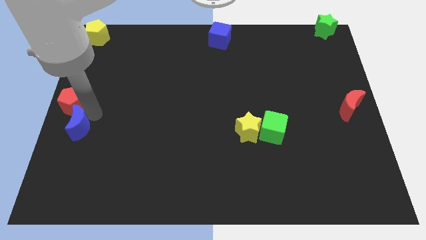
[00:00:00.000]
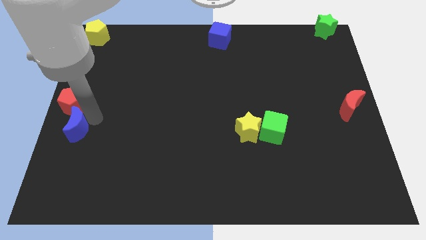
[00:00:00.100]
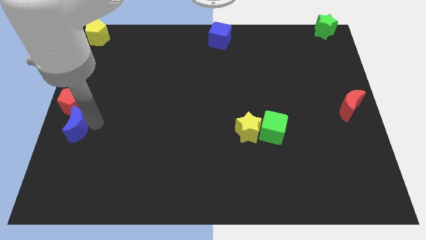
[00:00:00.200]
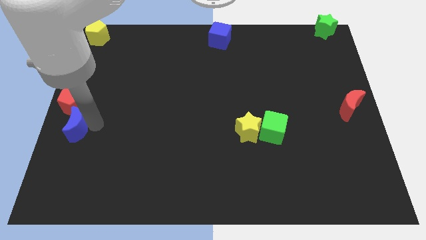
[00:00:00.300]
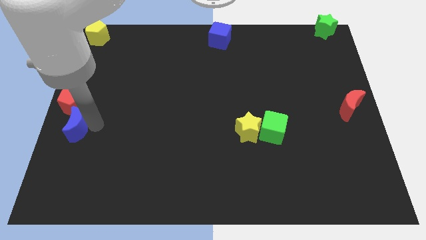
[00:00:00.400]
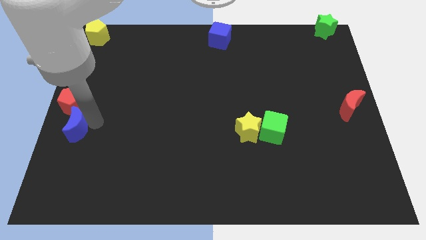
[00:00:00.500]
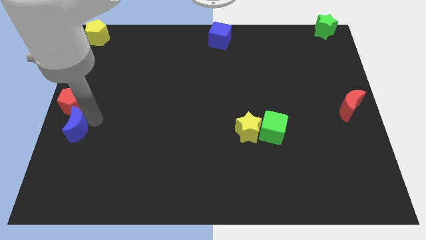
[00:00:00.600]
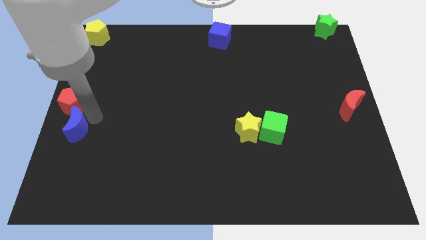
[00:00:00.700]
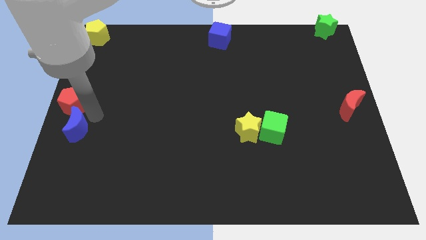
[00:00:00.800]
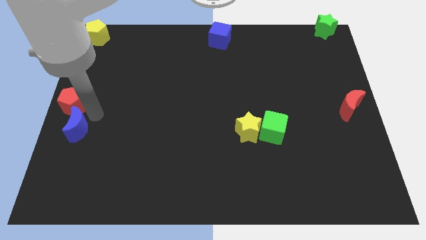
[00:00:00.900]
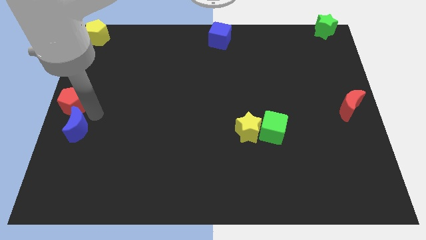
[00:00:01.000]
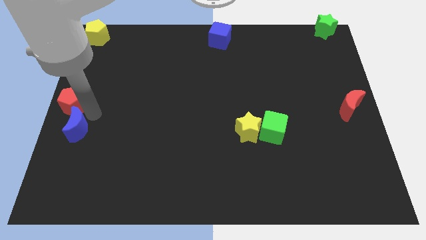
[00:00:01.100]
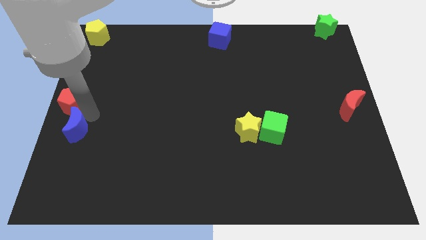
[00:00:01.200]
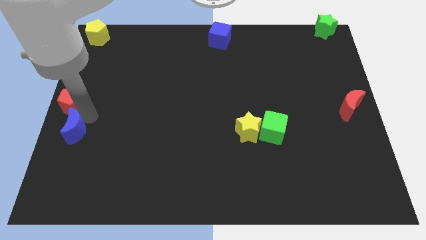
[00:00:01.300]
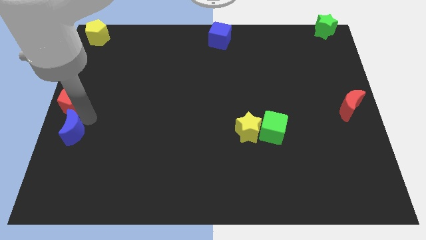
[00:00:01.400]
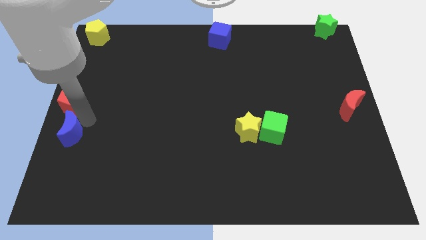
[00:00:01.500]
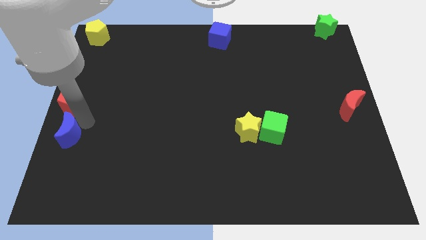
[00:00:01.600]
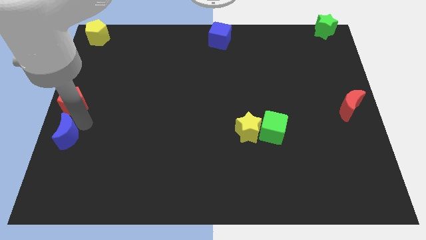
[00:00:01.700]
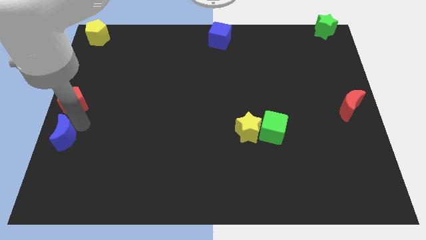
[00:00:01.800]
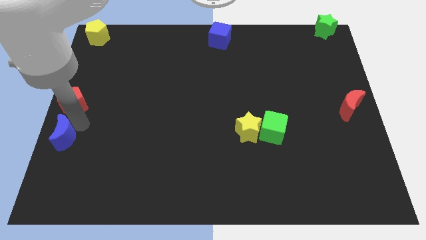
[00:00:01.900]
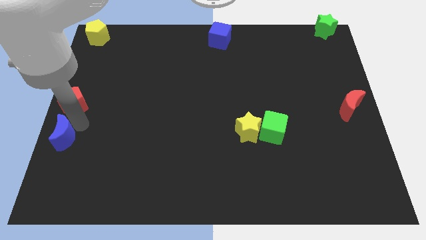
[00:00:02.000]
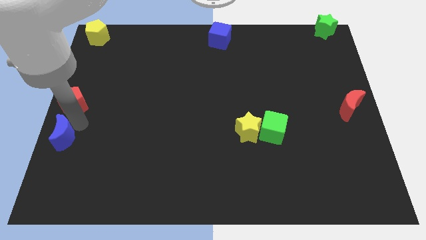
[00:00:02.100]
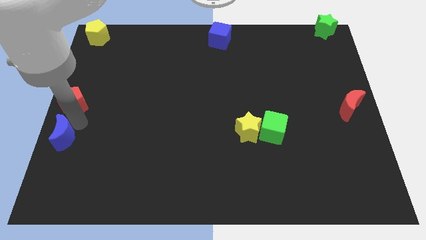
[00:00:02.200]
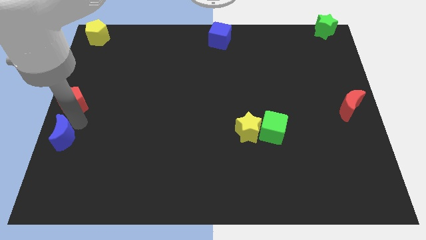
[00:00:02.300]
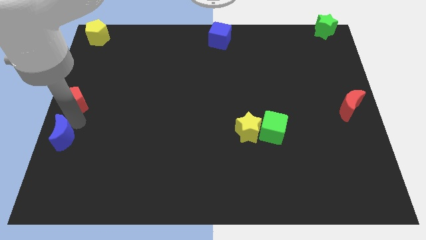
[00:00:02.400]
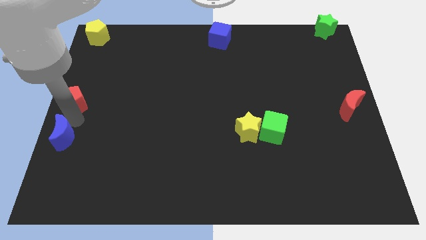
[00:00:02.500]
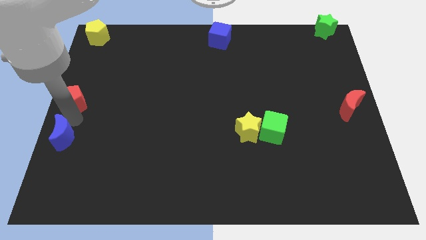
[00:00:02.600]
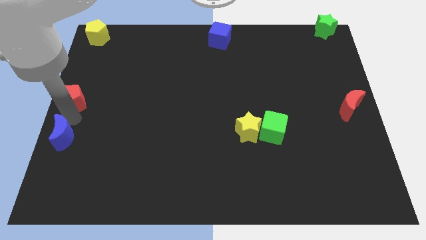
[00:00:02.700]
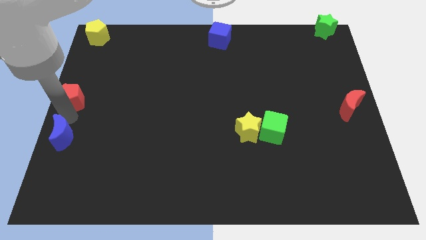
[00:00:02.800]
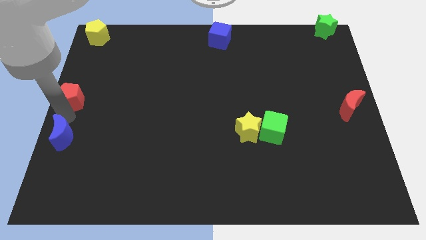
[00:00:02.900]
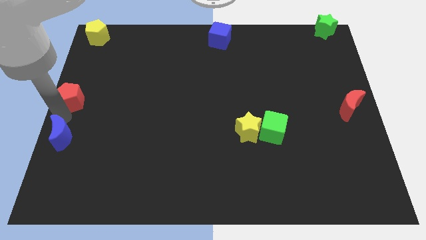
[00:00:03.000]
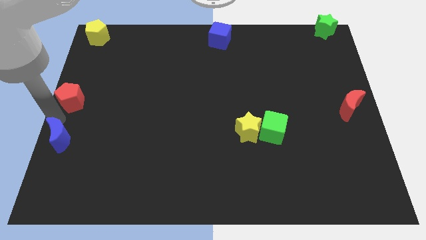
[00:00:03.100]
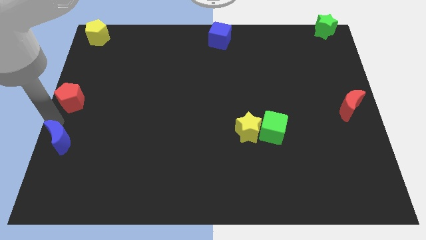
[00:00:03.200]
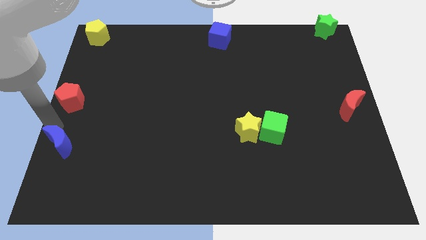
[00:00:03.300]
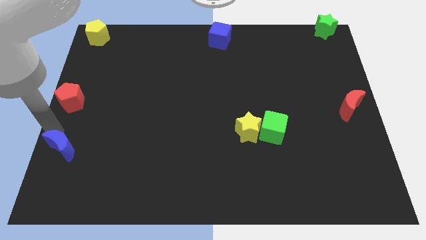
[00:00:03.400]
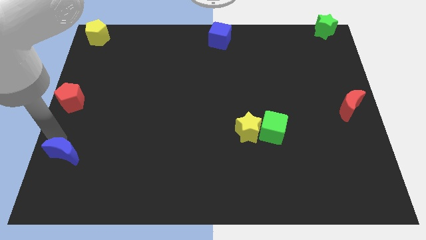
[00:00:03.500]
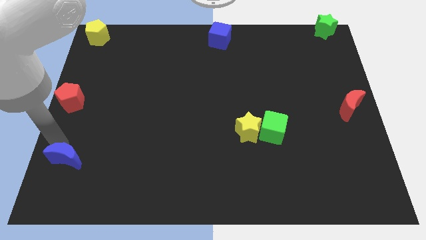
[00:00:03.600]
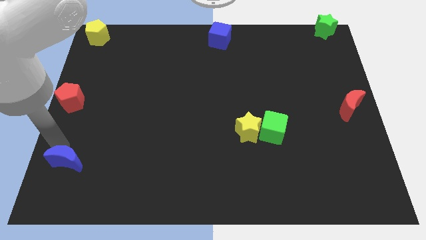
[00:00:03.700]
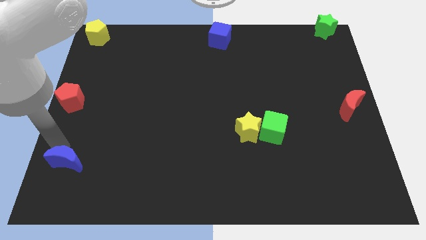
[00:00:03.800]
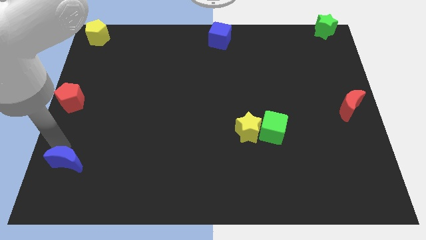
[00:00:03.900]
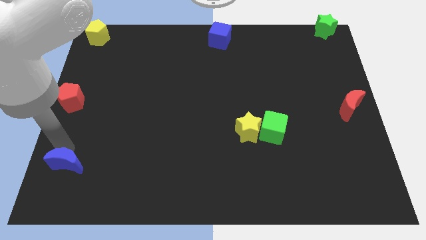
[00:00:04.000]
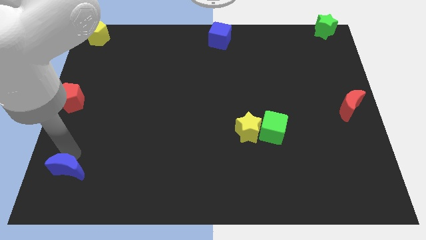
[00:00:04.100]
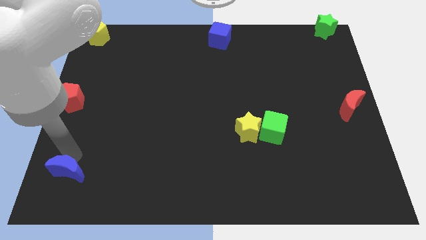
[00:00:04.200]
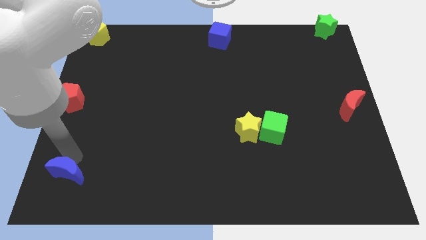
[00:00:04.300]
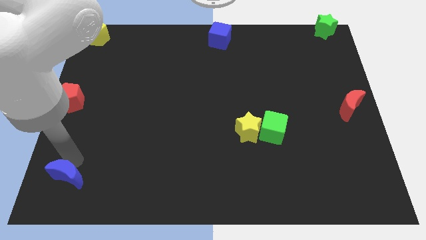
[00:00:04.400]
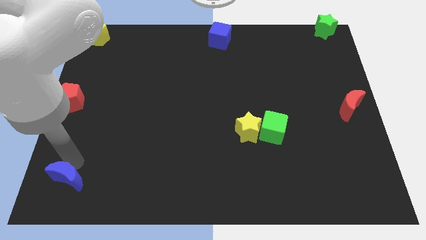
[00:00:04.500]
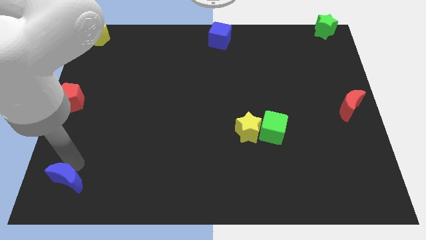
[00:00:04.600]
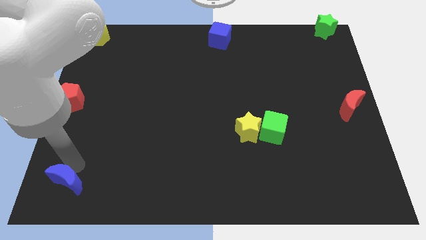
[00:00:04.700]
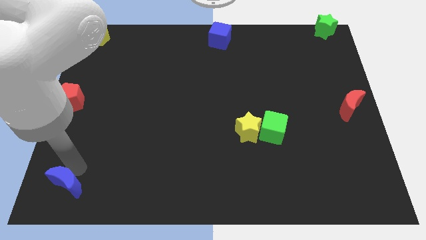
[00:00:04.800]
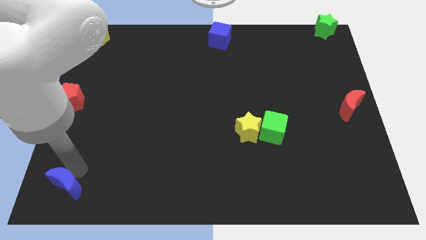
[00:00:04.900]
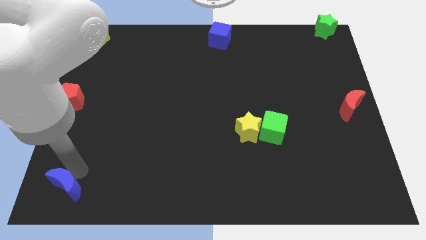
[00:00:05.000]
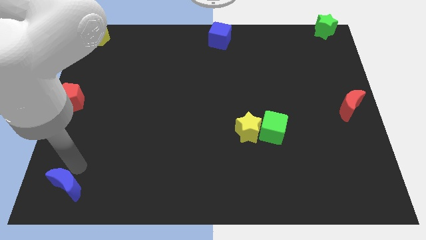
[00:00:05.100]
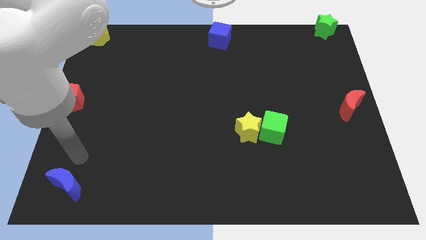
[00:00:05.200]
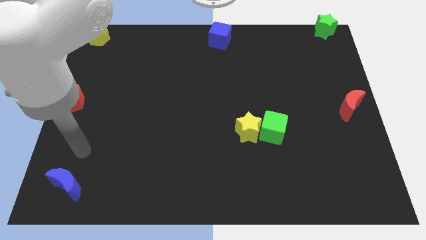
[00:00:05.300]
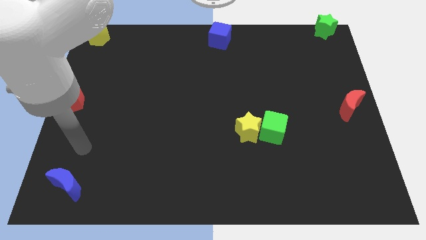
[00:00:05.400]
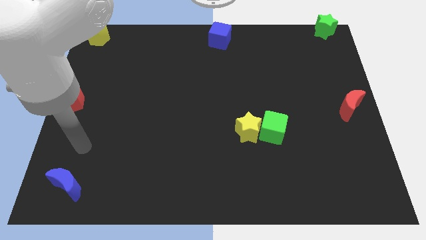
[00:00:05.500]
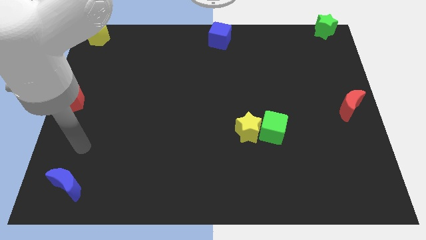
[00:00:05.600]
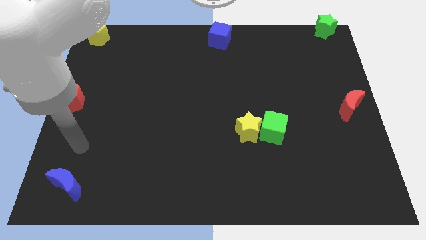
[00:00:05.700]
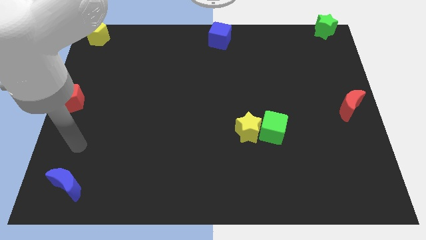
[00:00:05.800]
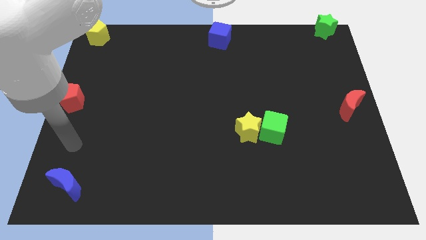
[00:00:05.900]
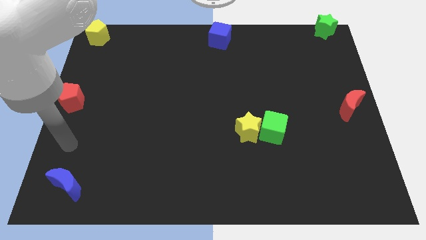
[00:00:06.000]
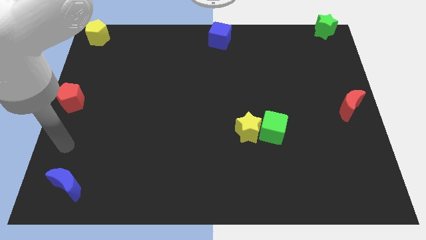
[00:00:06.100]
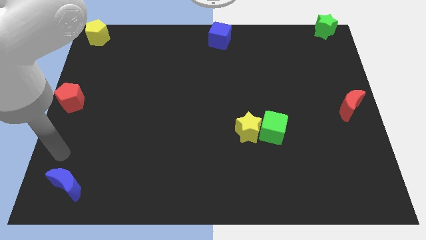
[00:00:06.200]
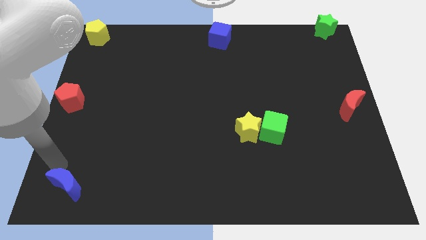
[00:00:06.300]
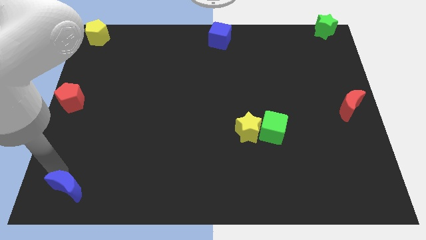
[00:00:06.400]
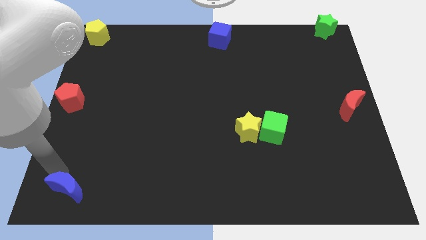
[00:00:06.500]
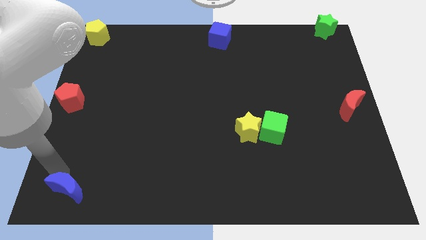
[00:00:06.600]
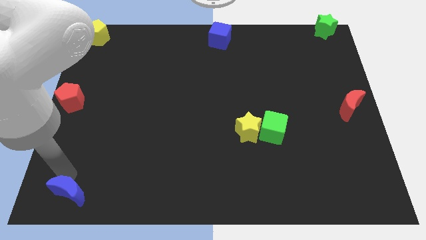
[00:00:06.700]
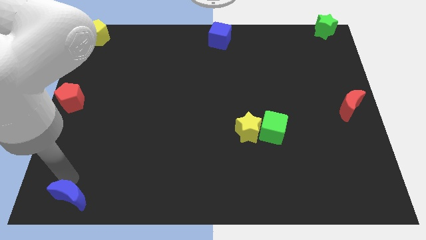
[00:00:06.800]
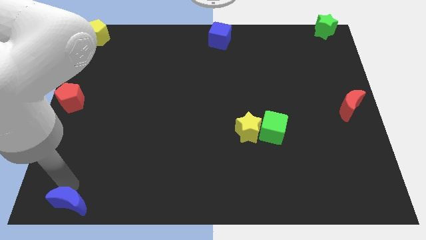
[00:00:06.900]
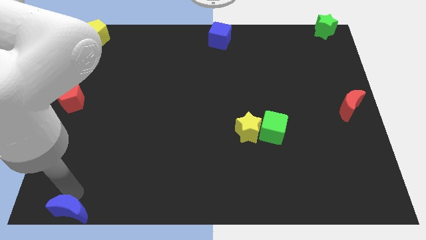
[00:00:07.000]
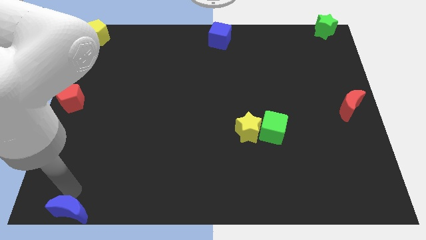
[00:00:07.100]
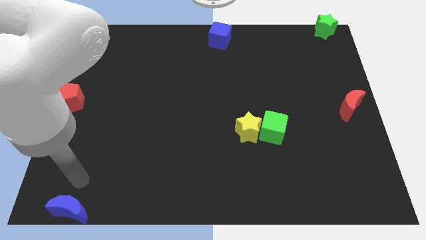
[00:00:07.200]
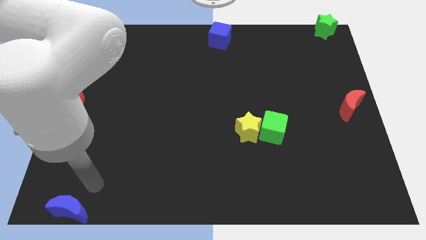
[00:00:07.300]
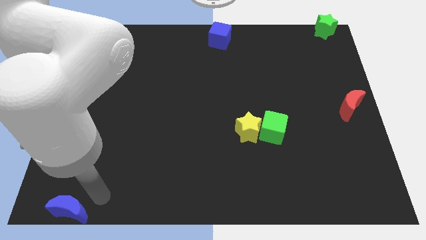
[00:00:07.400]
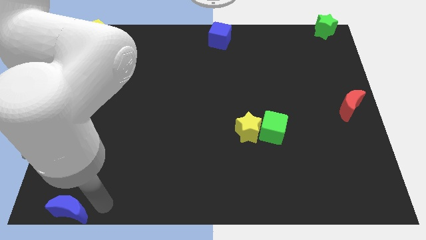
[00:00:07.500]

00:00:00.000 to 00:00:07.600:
apart red pentagon and blue crescent

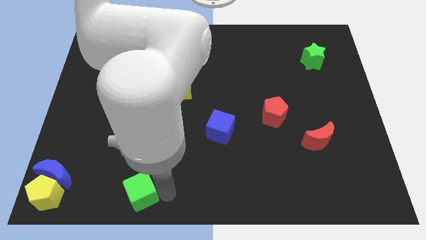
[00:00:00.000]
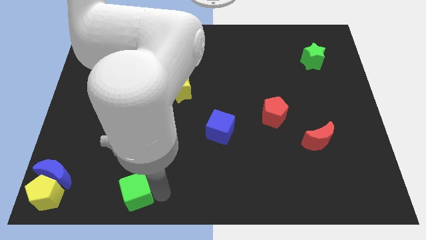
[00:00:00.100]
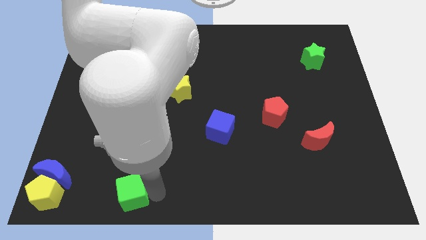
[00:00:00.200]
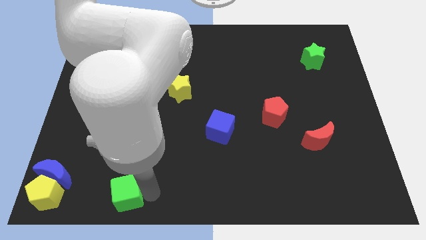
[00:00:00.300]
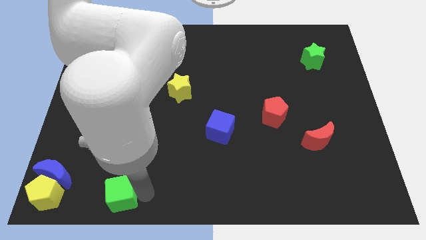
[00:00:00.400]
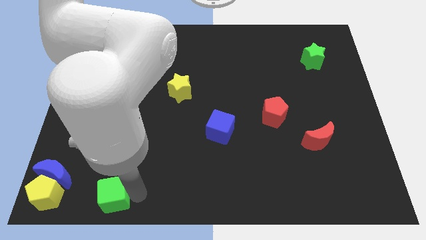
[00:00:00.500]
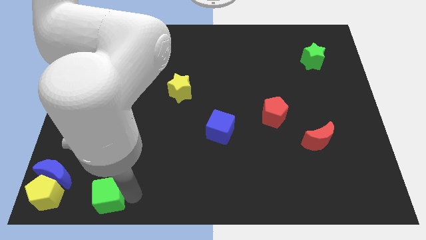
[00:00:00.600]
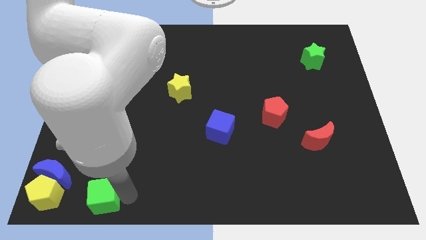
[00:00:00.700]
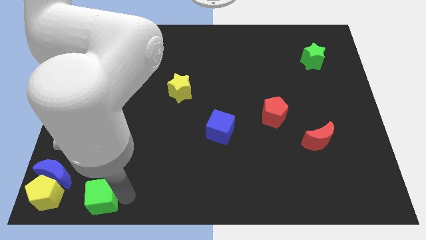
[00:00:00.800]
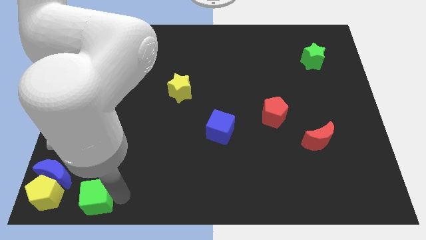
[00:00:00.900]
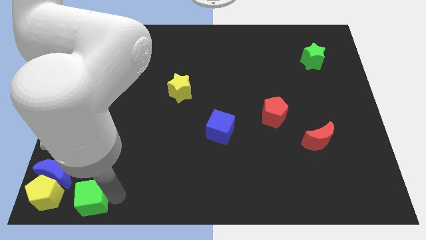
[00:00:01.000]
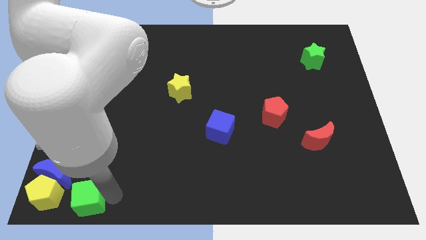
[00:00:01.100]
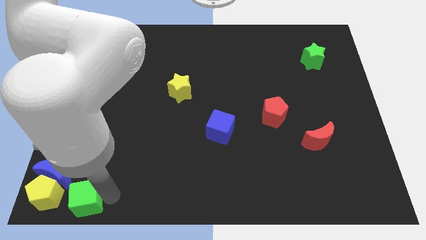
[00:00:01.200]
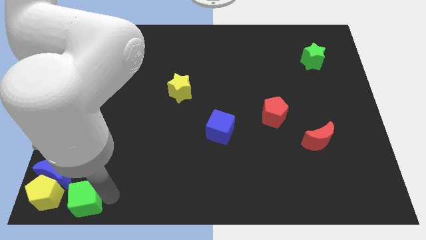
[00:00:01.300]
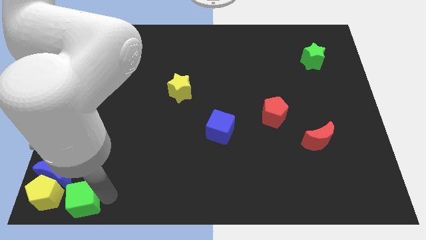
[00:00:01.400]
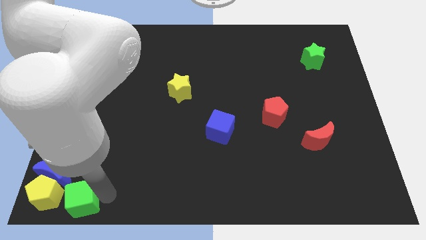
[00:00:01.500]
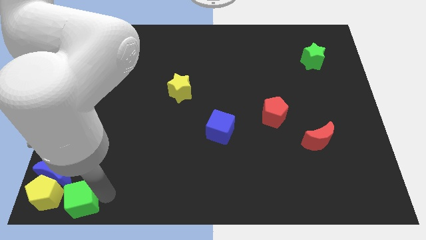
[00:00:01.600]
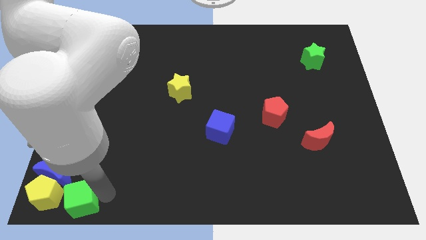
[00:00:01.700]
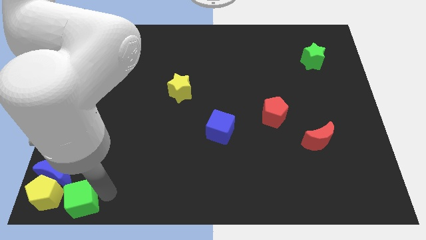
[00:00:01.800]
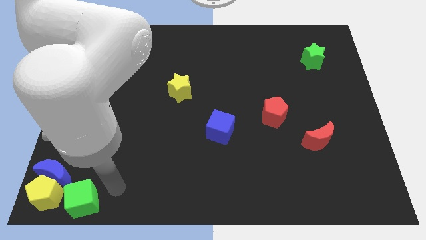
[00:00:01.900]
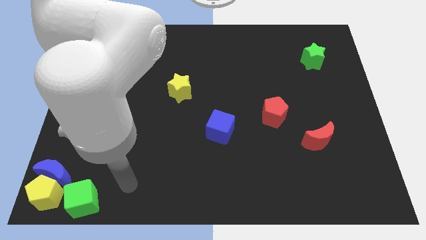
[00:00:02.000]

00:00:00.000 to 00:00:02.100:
move green cube into the yellow pentagon
